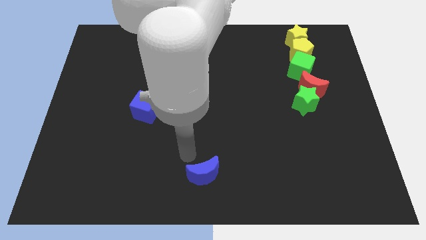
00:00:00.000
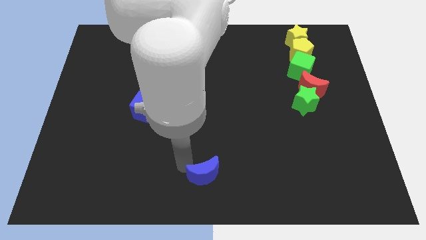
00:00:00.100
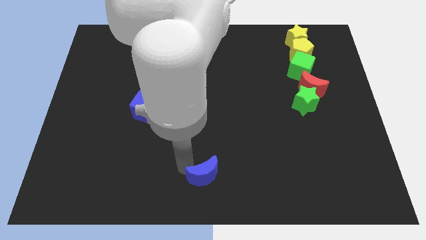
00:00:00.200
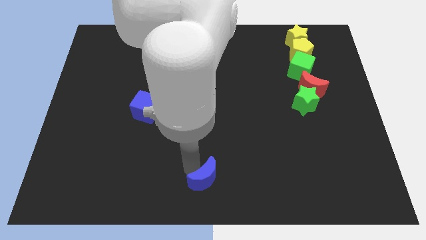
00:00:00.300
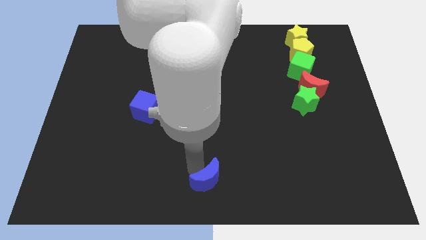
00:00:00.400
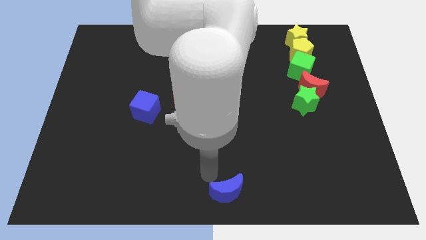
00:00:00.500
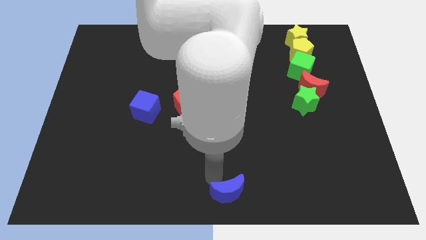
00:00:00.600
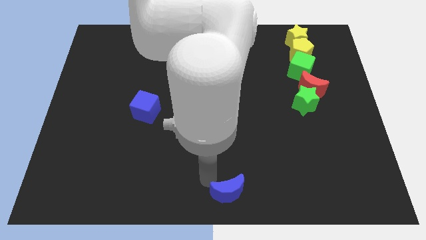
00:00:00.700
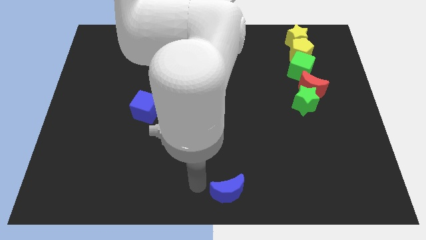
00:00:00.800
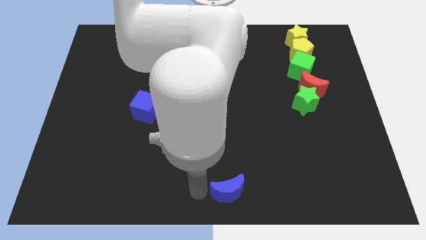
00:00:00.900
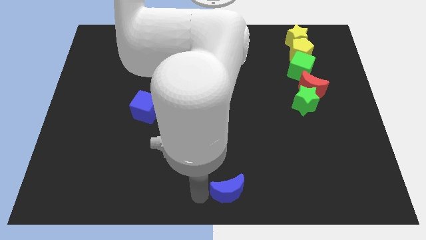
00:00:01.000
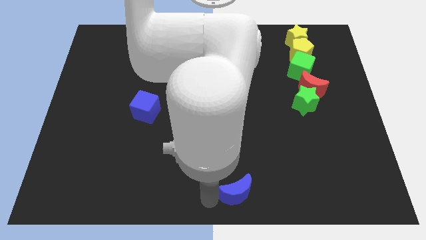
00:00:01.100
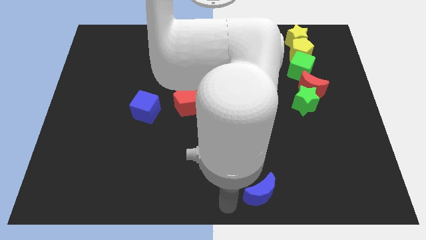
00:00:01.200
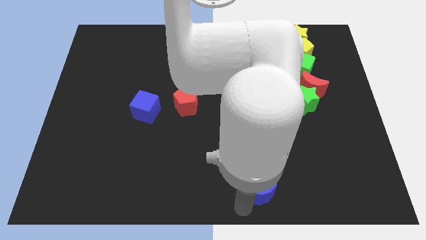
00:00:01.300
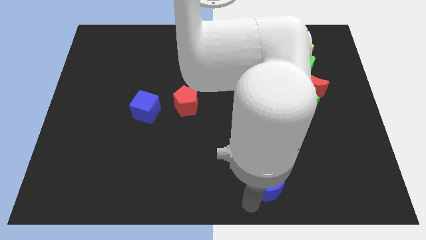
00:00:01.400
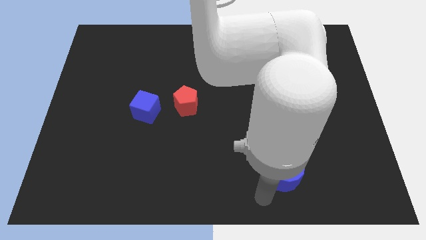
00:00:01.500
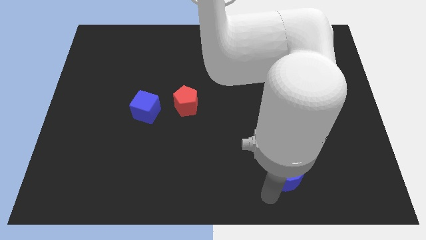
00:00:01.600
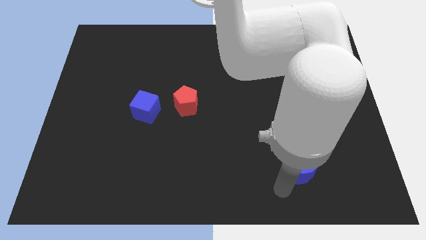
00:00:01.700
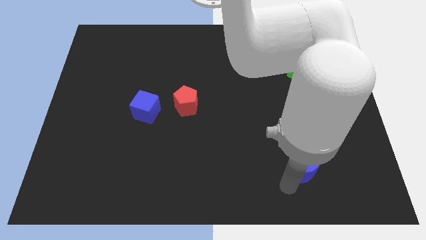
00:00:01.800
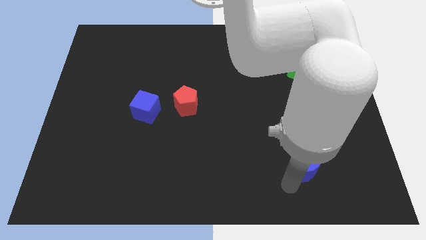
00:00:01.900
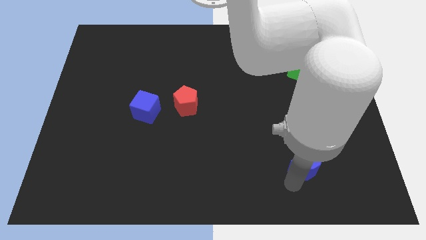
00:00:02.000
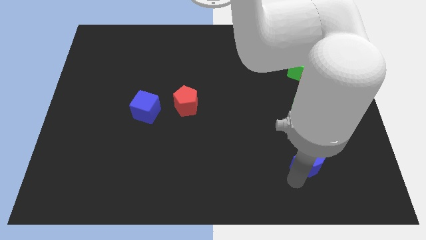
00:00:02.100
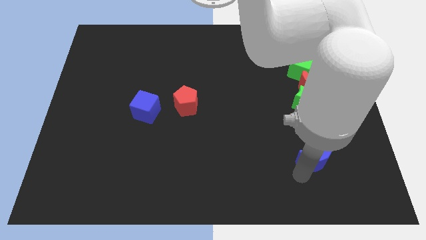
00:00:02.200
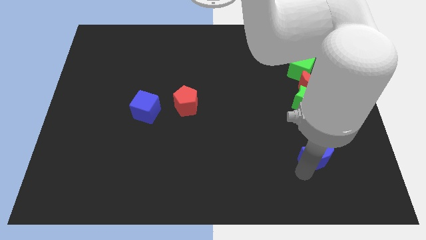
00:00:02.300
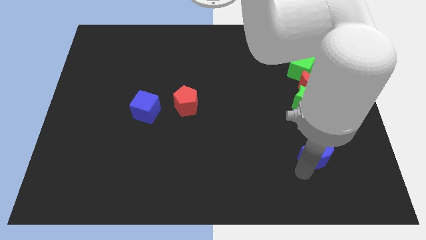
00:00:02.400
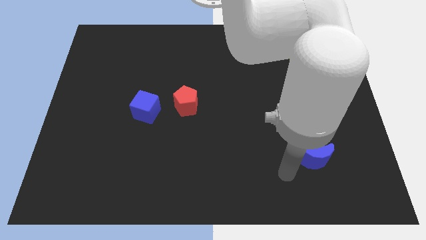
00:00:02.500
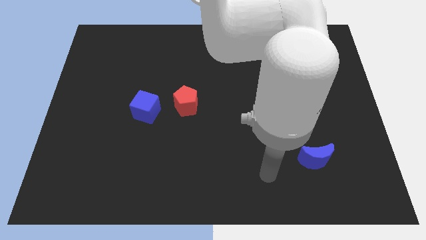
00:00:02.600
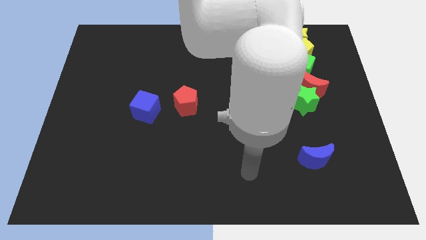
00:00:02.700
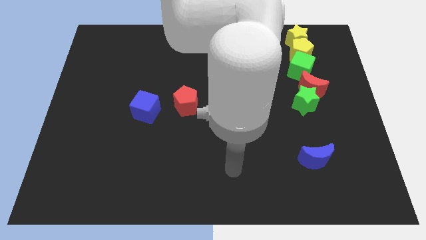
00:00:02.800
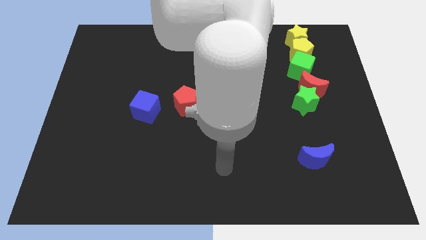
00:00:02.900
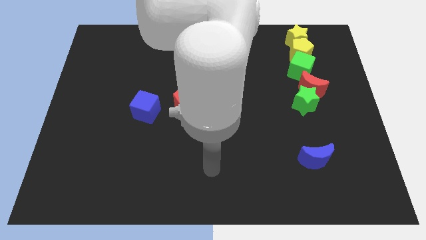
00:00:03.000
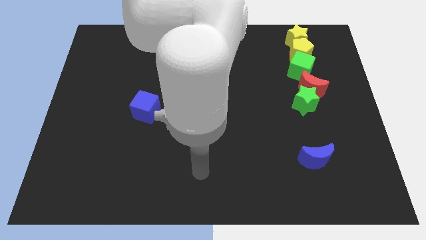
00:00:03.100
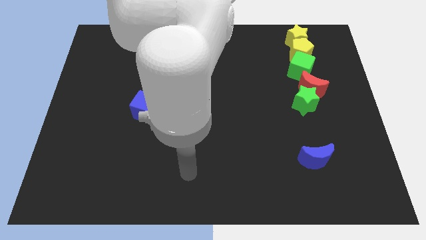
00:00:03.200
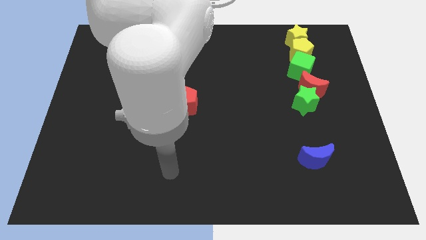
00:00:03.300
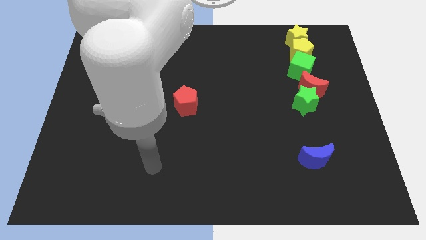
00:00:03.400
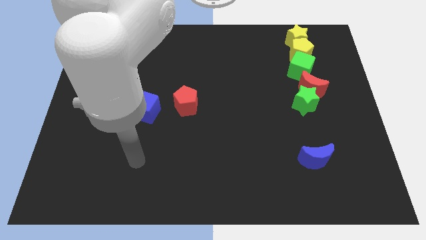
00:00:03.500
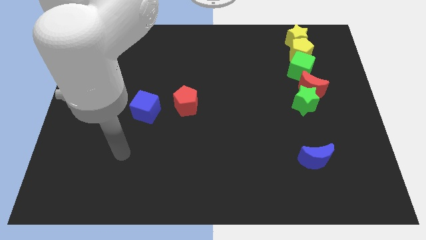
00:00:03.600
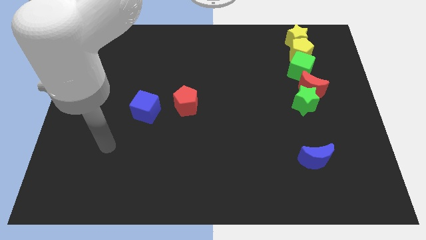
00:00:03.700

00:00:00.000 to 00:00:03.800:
place the blue moon vertically below the green star

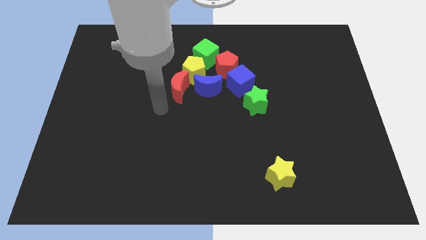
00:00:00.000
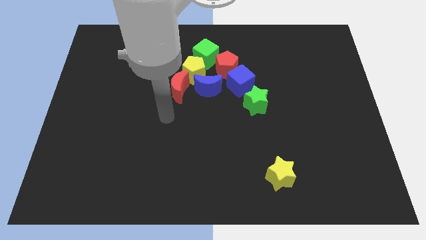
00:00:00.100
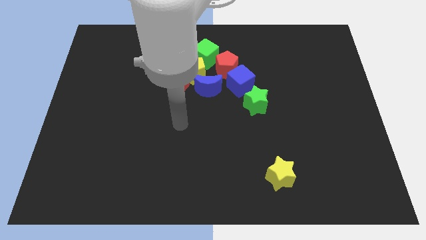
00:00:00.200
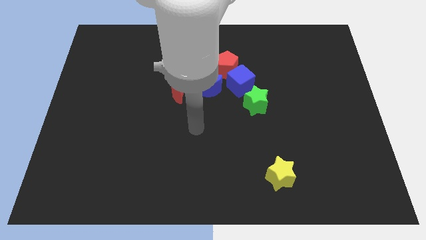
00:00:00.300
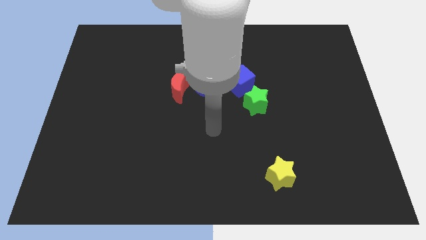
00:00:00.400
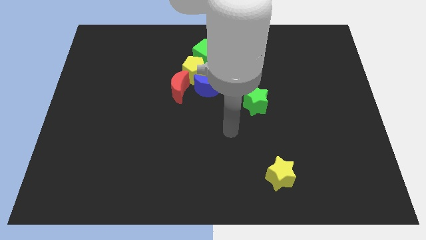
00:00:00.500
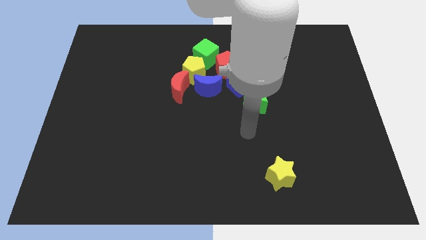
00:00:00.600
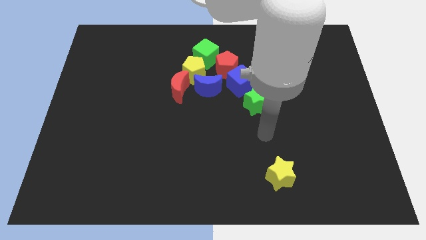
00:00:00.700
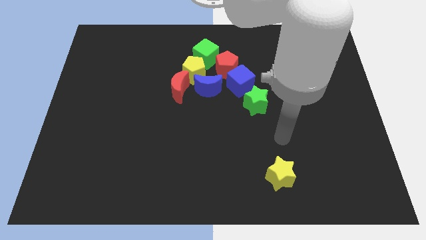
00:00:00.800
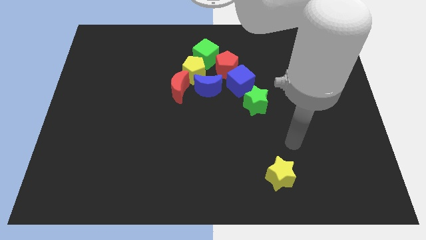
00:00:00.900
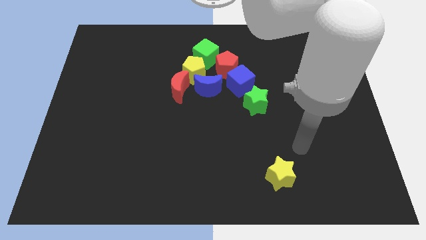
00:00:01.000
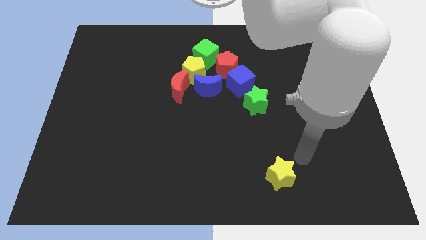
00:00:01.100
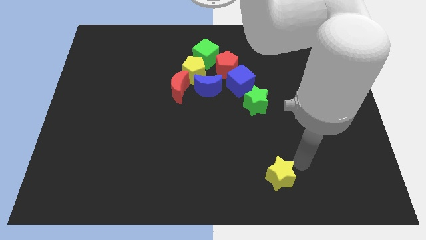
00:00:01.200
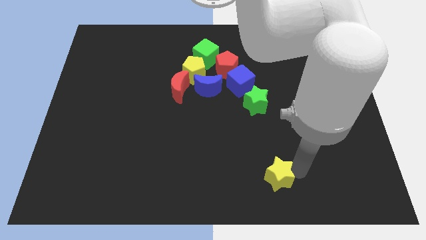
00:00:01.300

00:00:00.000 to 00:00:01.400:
place the arm right to the yellow star

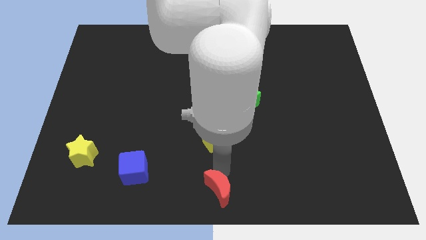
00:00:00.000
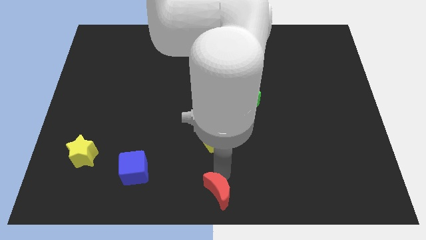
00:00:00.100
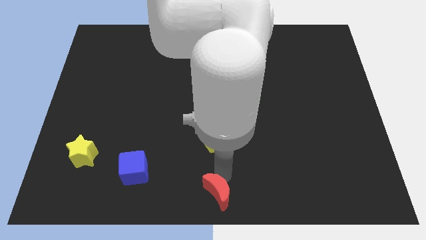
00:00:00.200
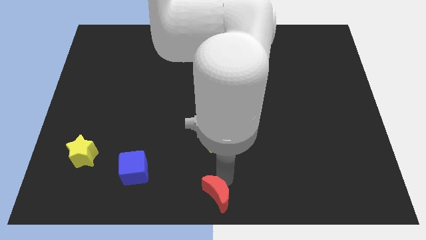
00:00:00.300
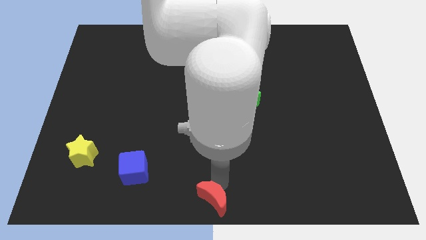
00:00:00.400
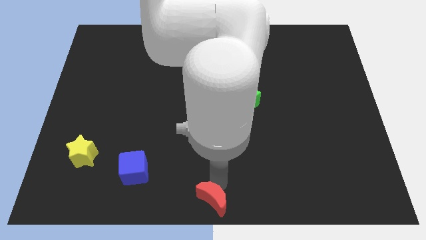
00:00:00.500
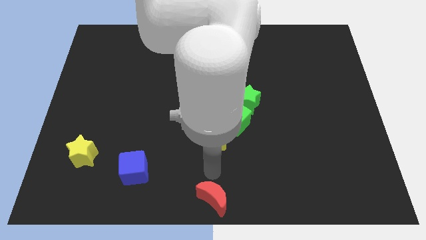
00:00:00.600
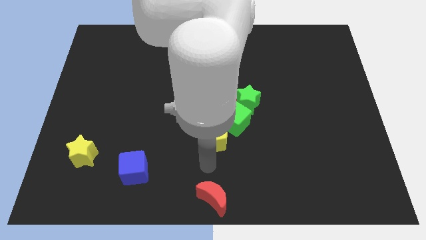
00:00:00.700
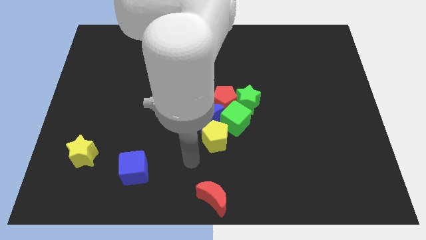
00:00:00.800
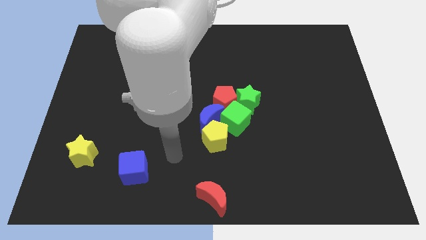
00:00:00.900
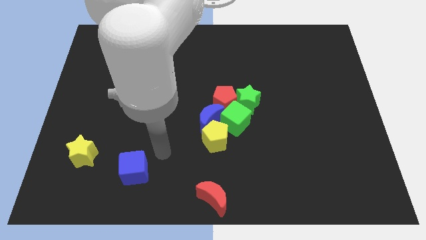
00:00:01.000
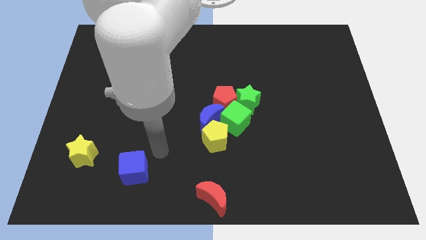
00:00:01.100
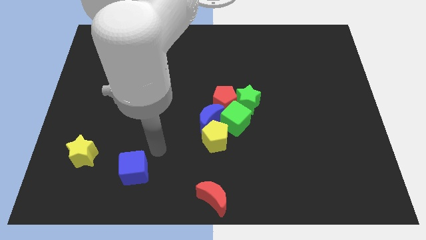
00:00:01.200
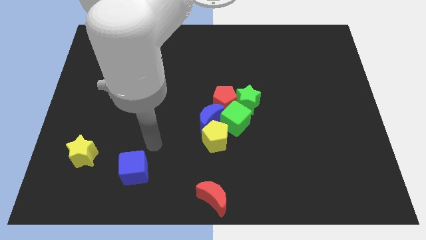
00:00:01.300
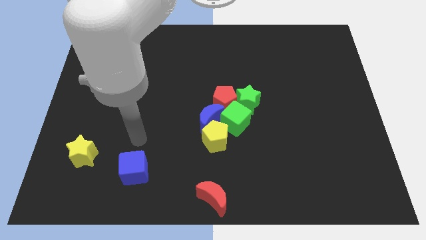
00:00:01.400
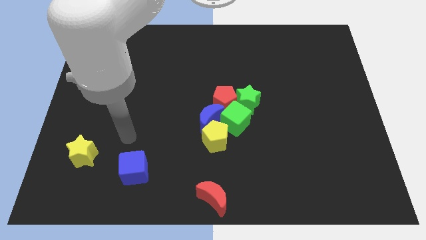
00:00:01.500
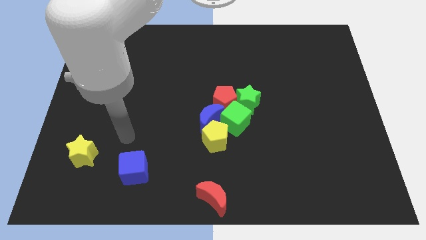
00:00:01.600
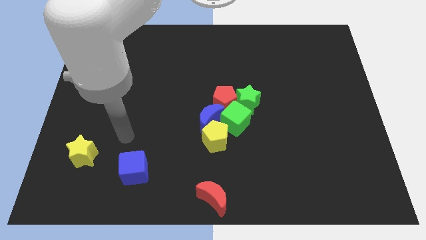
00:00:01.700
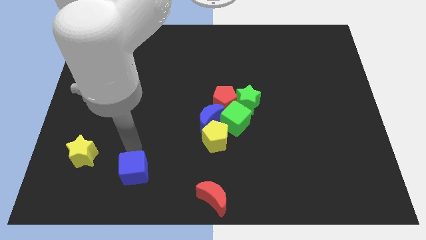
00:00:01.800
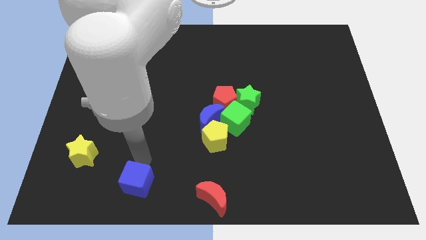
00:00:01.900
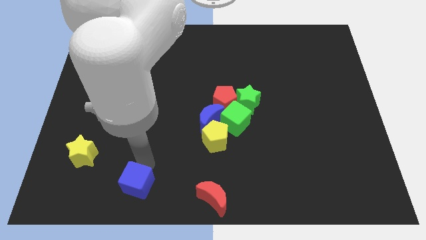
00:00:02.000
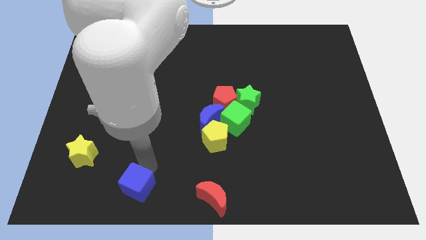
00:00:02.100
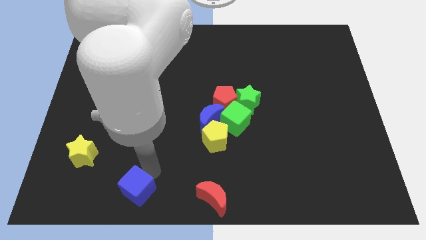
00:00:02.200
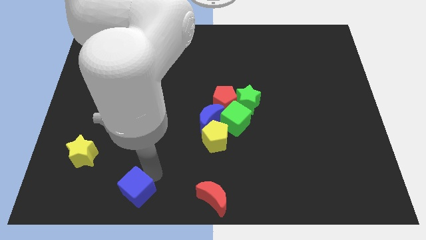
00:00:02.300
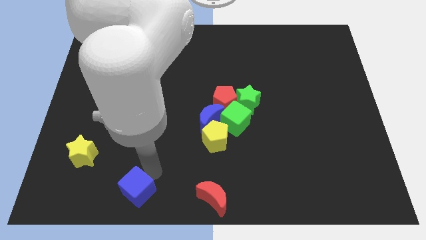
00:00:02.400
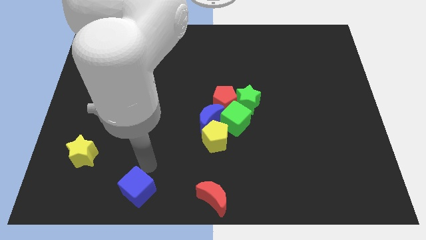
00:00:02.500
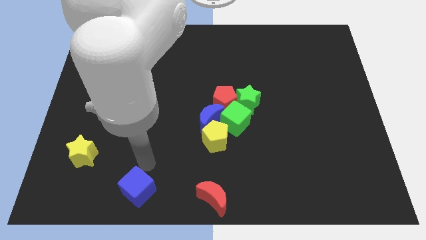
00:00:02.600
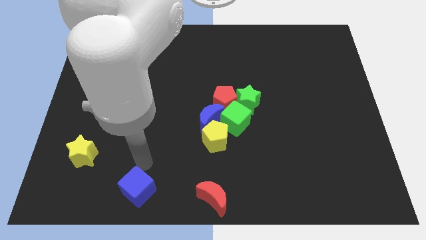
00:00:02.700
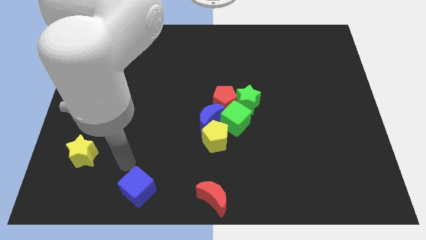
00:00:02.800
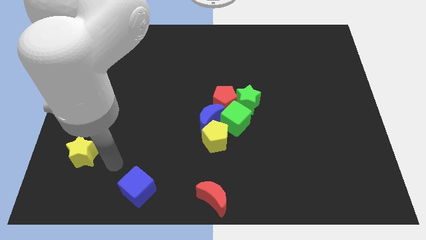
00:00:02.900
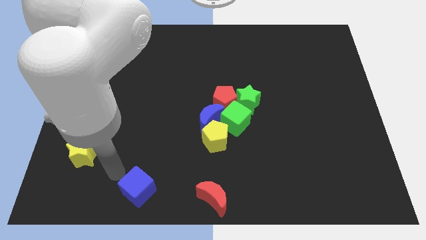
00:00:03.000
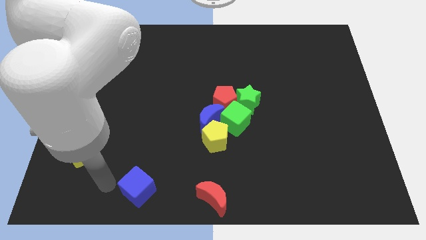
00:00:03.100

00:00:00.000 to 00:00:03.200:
move the blue cube and red moon to bottom center

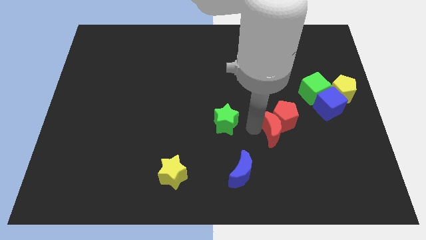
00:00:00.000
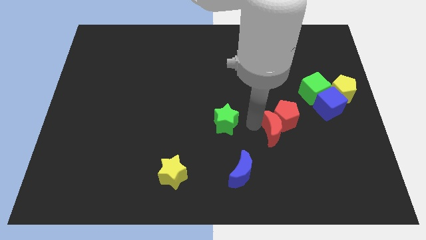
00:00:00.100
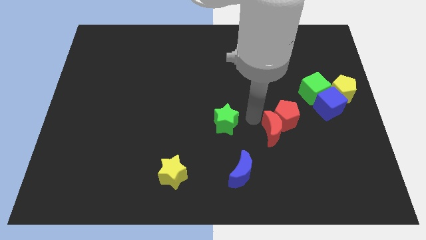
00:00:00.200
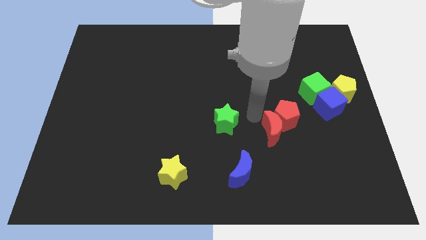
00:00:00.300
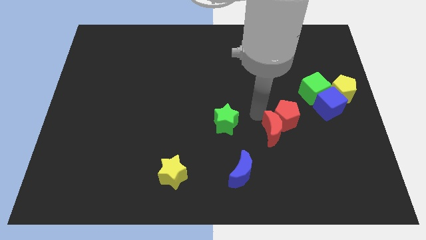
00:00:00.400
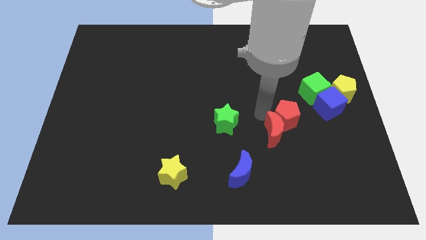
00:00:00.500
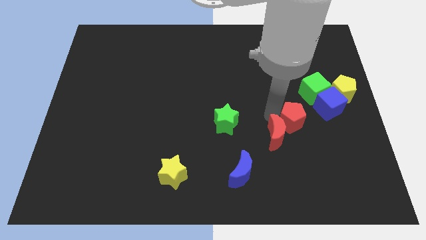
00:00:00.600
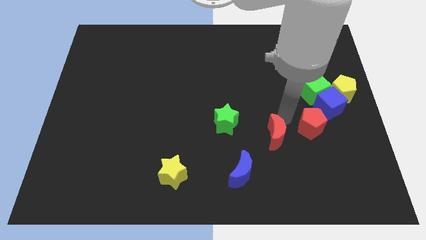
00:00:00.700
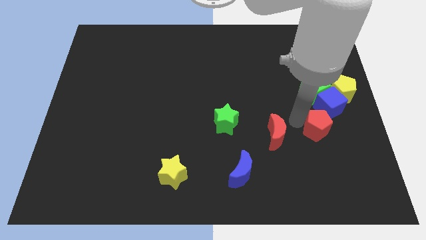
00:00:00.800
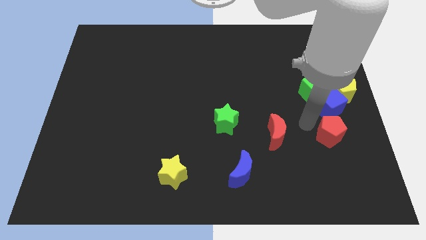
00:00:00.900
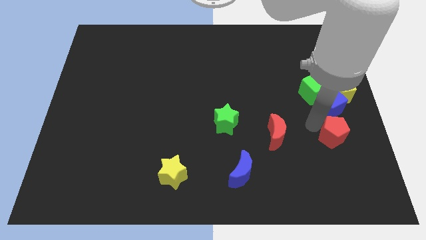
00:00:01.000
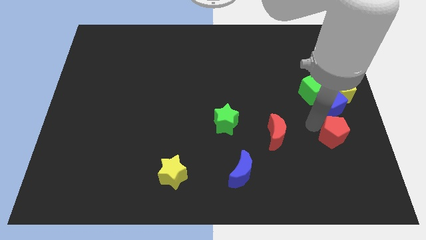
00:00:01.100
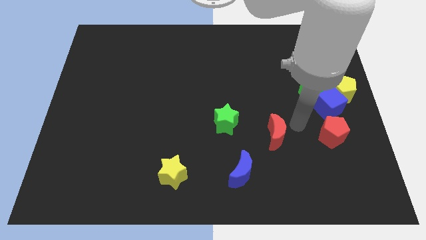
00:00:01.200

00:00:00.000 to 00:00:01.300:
push the red pentagon away from the red crescent
